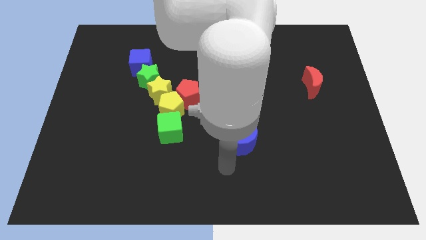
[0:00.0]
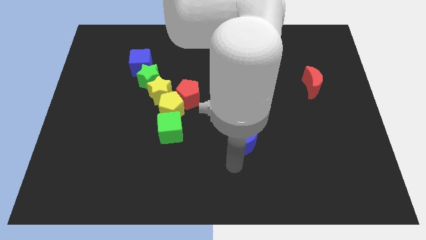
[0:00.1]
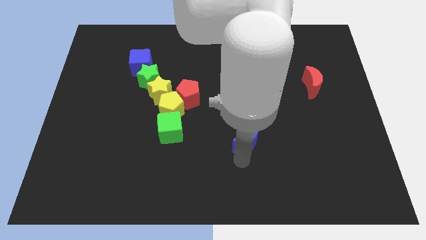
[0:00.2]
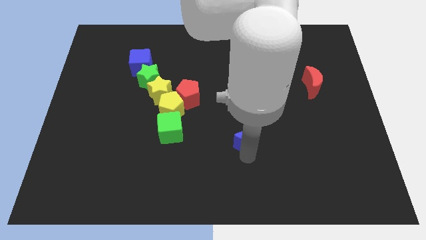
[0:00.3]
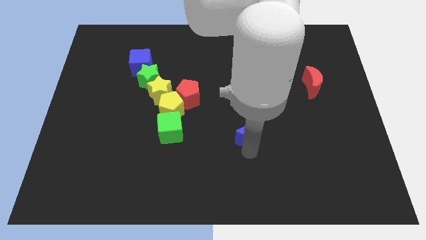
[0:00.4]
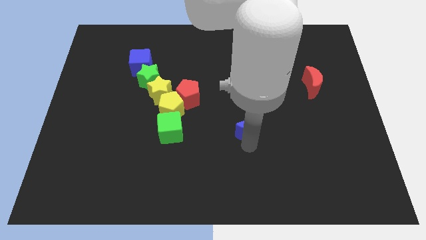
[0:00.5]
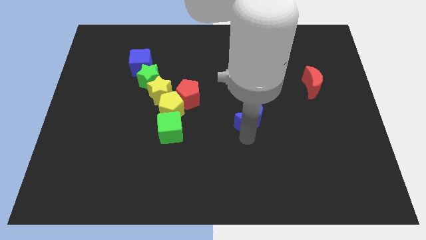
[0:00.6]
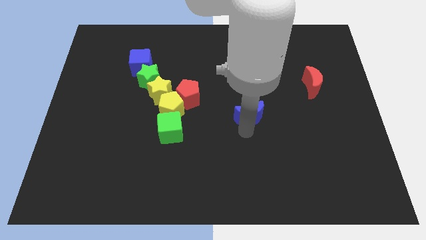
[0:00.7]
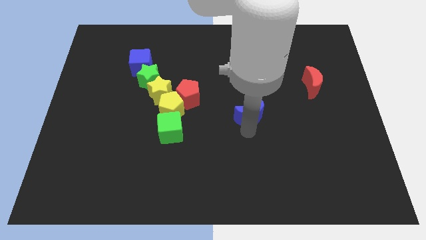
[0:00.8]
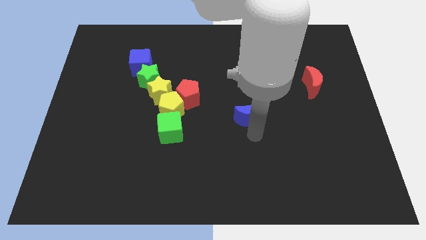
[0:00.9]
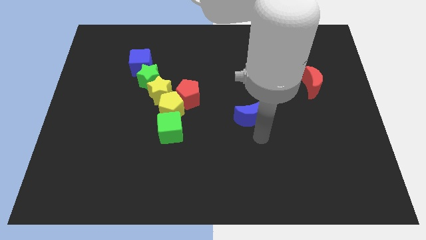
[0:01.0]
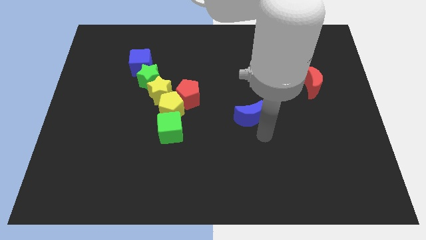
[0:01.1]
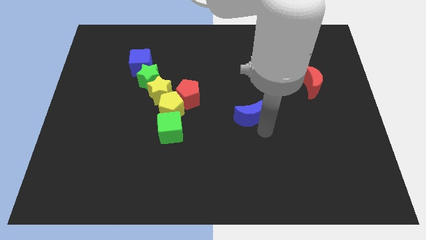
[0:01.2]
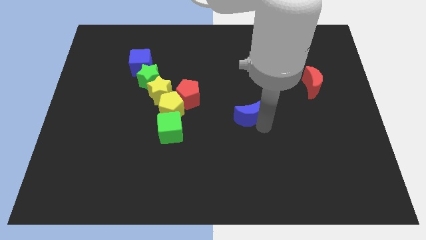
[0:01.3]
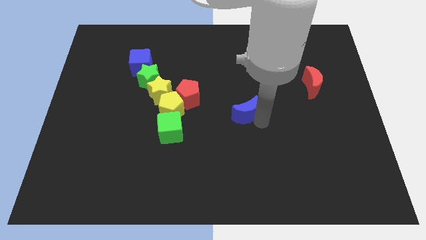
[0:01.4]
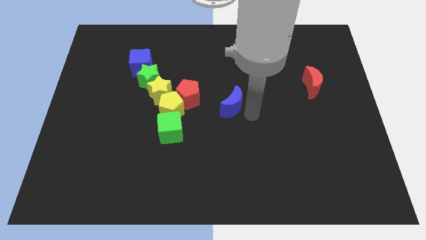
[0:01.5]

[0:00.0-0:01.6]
move the blue moon to the right of red pentagon

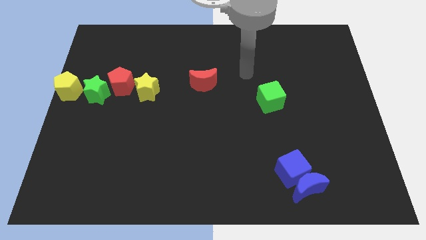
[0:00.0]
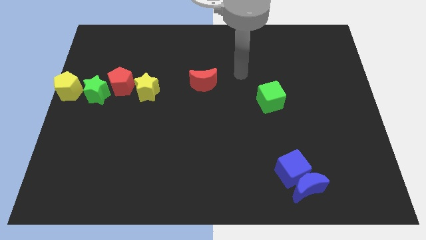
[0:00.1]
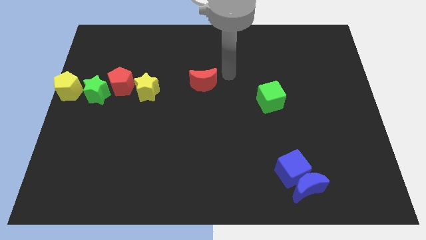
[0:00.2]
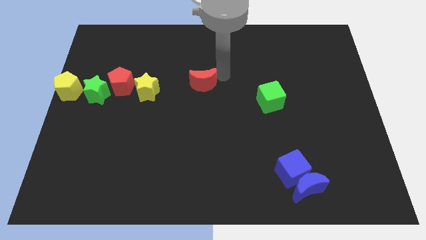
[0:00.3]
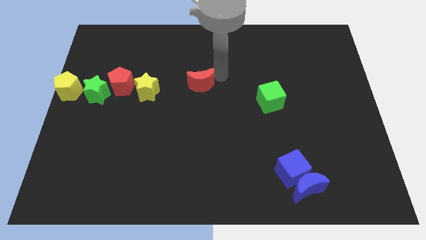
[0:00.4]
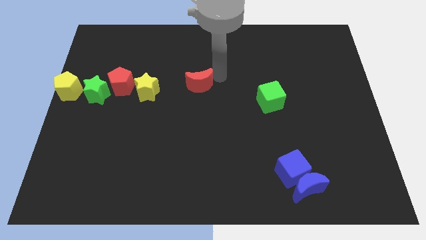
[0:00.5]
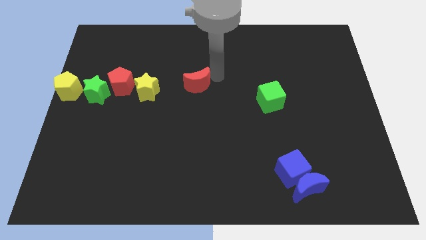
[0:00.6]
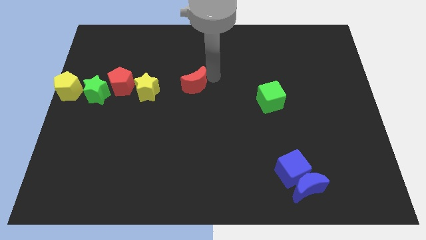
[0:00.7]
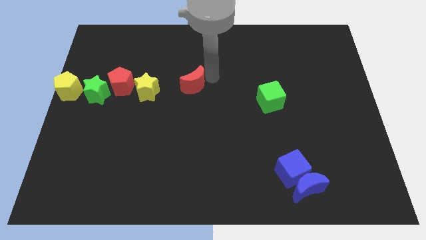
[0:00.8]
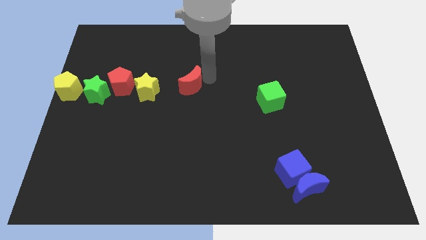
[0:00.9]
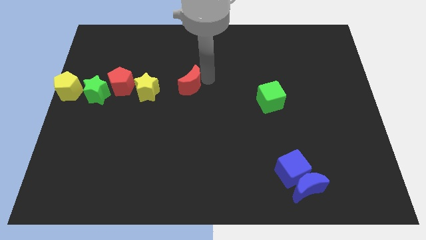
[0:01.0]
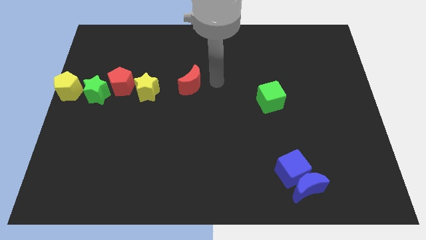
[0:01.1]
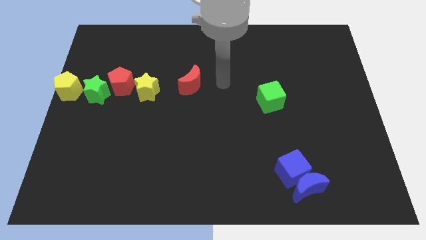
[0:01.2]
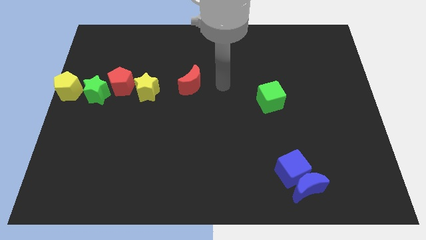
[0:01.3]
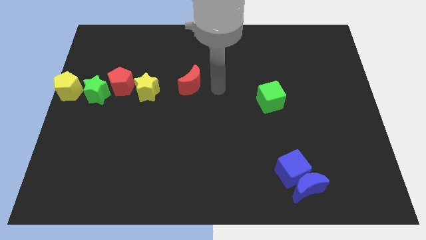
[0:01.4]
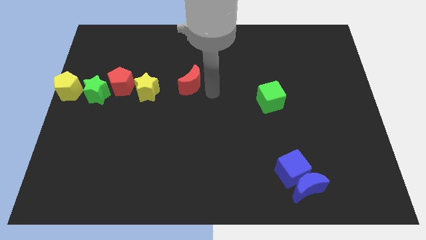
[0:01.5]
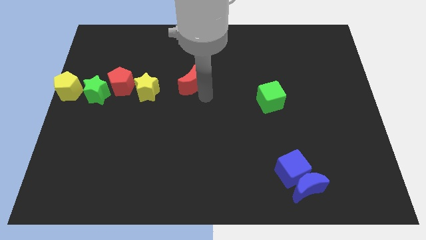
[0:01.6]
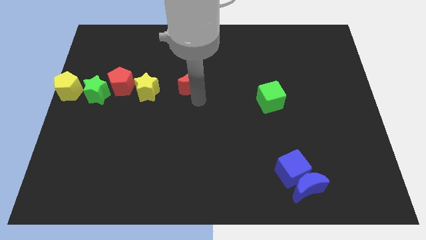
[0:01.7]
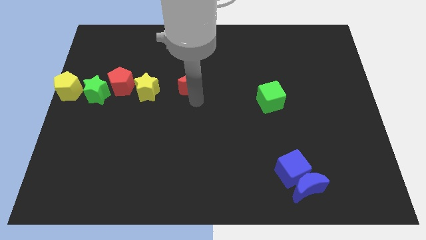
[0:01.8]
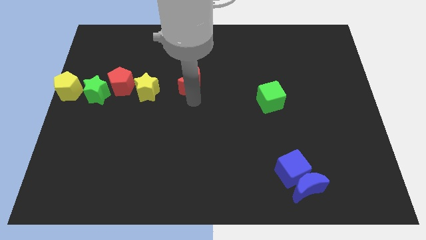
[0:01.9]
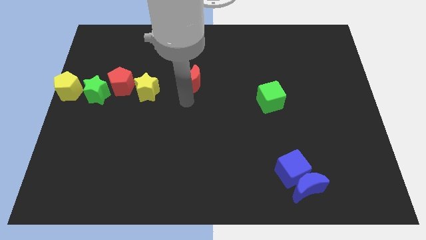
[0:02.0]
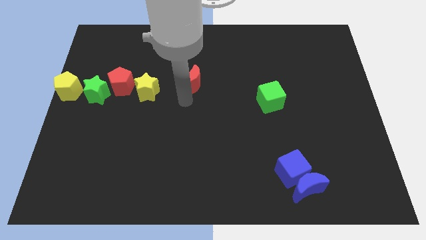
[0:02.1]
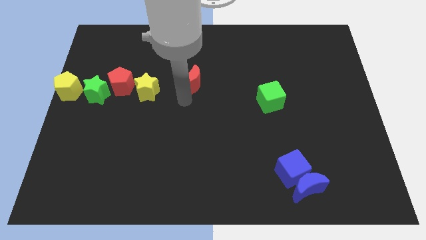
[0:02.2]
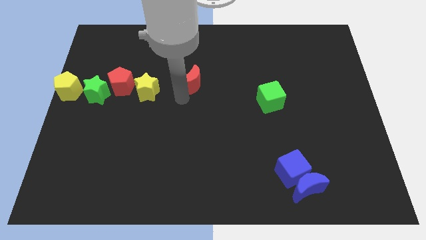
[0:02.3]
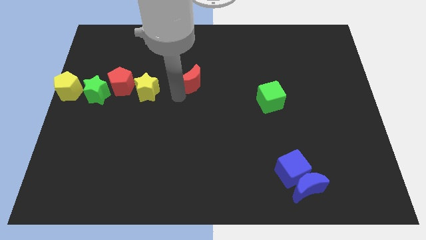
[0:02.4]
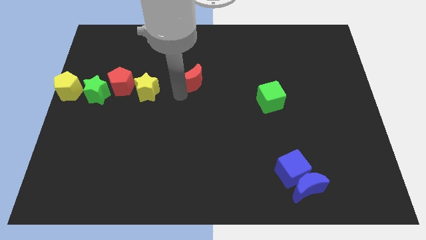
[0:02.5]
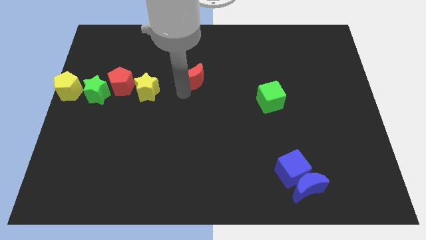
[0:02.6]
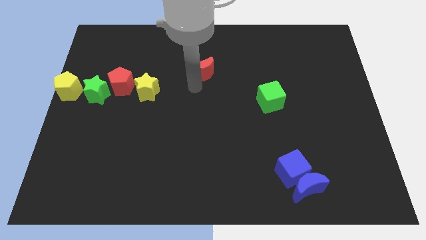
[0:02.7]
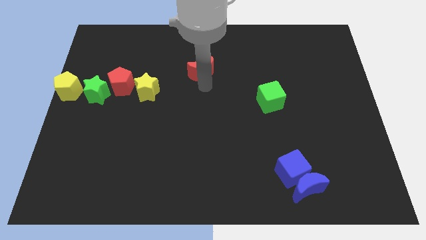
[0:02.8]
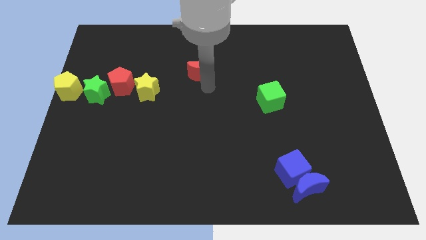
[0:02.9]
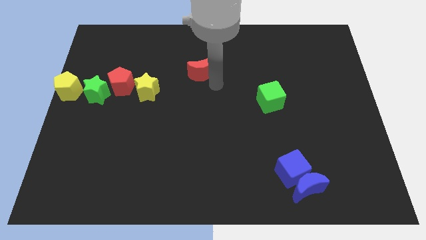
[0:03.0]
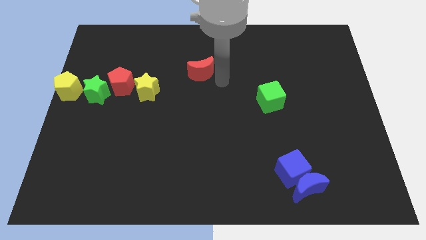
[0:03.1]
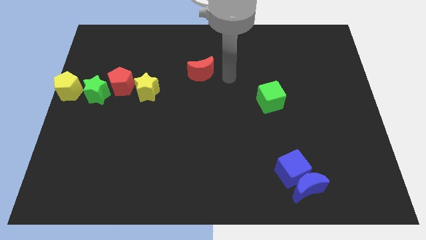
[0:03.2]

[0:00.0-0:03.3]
place the red moon diagonally to the right of yellow star

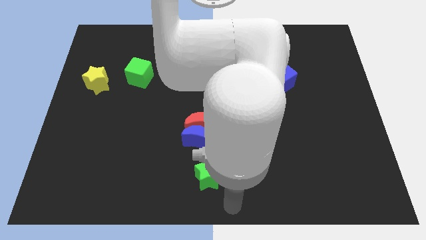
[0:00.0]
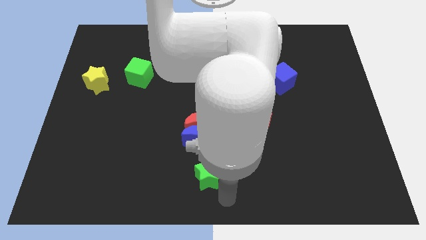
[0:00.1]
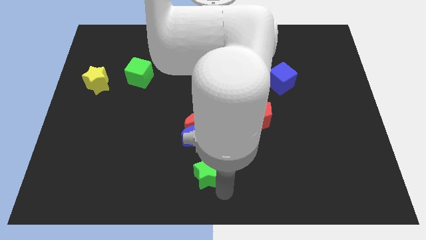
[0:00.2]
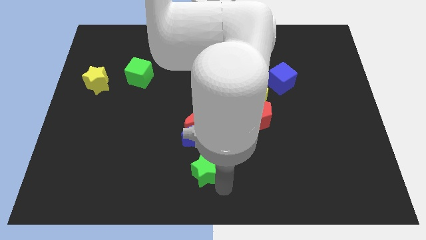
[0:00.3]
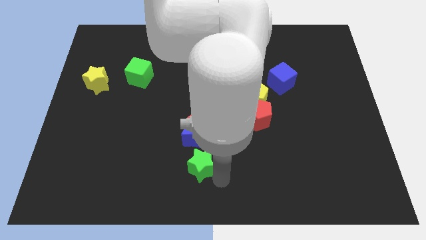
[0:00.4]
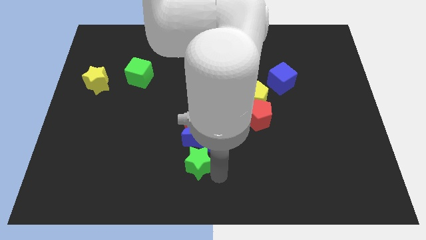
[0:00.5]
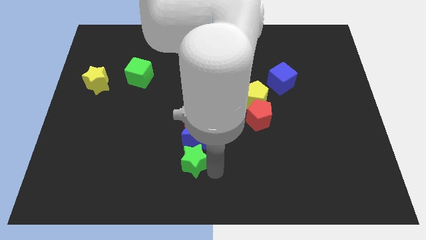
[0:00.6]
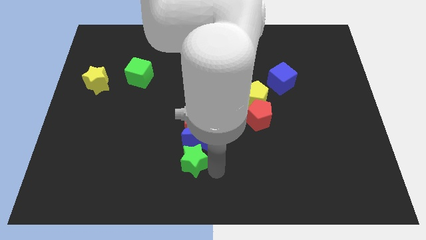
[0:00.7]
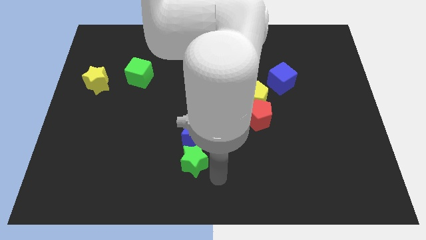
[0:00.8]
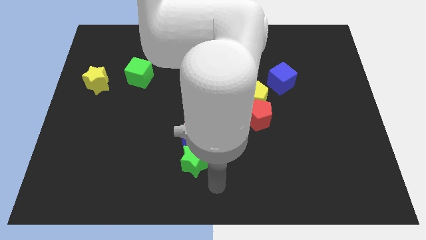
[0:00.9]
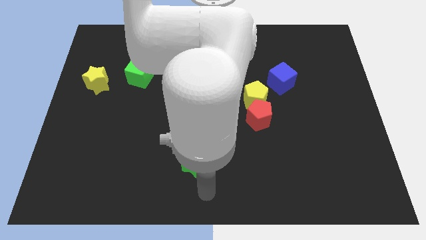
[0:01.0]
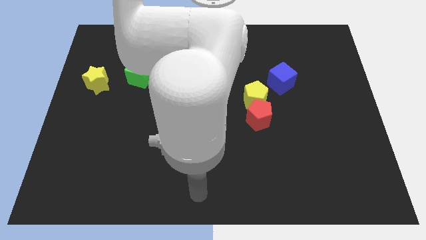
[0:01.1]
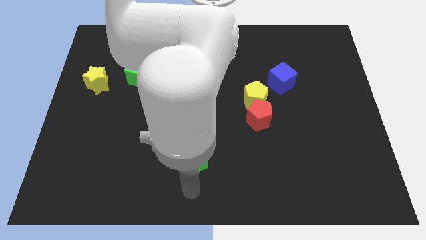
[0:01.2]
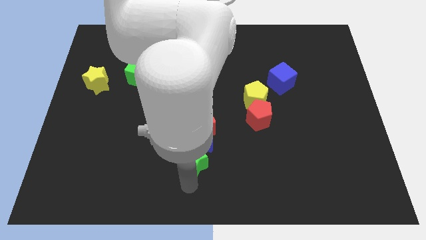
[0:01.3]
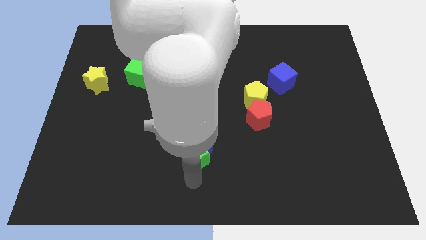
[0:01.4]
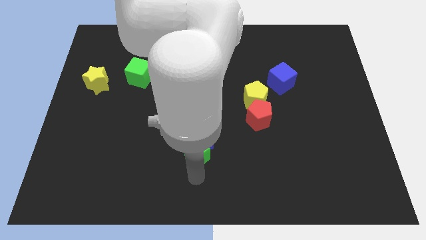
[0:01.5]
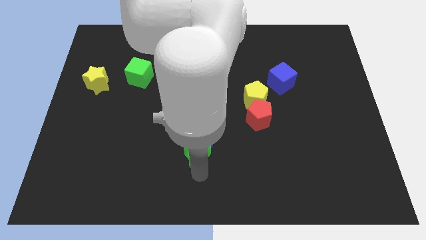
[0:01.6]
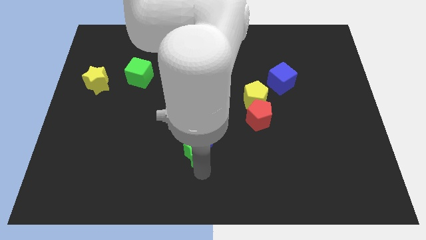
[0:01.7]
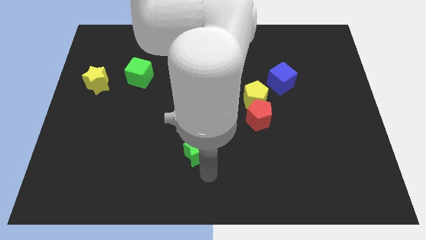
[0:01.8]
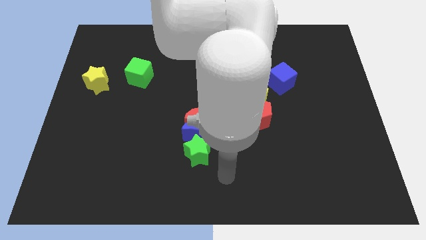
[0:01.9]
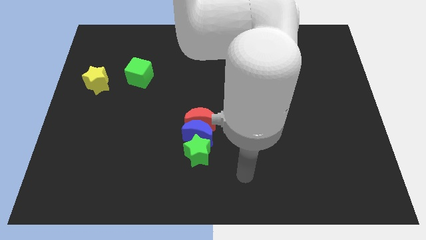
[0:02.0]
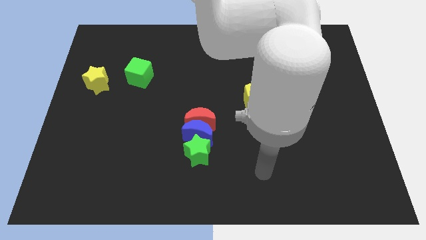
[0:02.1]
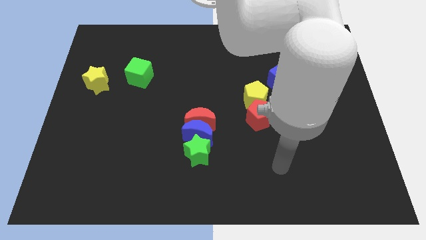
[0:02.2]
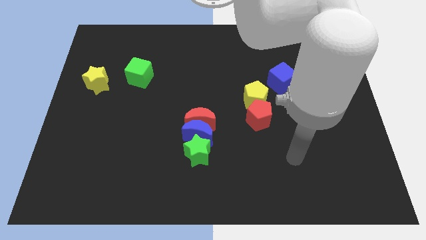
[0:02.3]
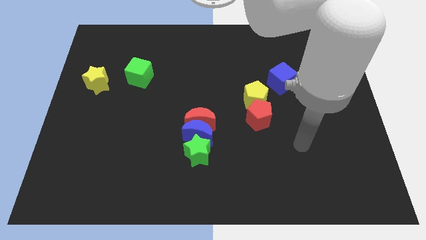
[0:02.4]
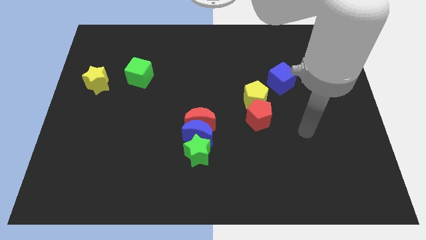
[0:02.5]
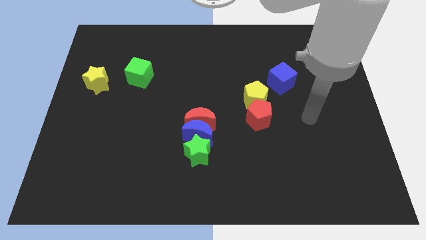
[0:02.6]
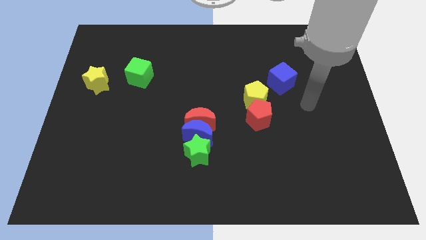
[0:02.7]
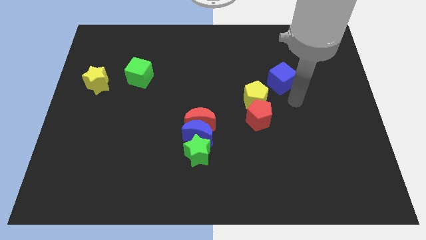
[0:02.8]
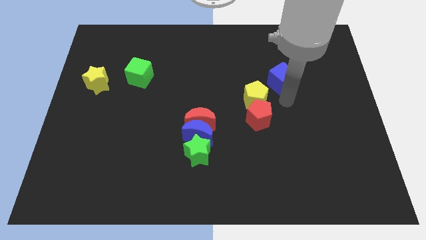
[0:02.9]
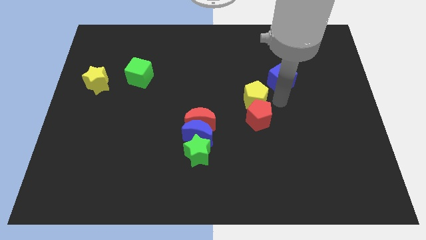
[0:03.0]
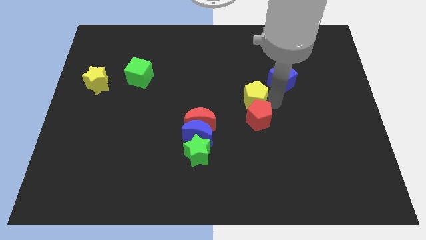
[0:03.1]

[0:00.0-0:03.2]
push the green star into the blue crescent

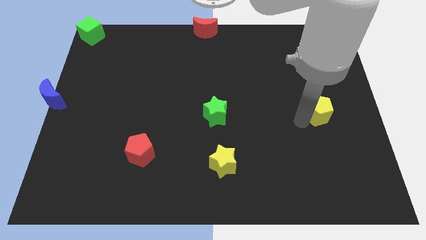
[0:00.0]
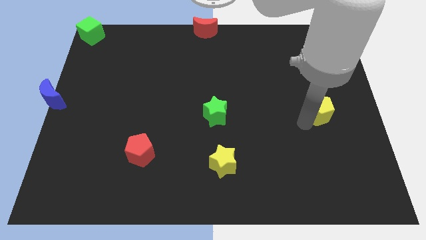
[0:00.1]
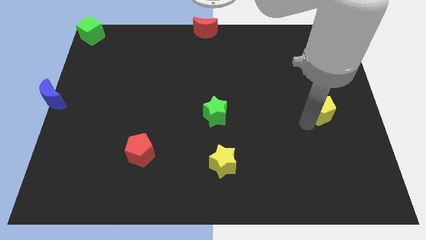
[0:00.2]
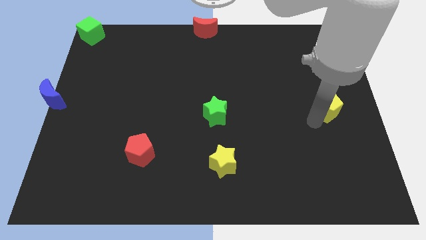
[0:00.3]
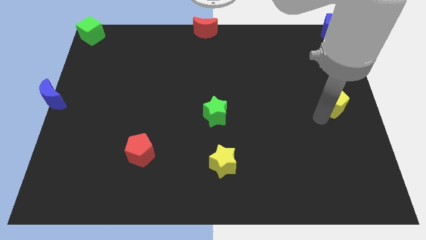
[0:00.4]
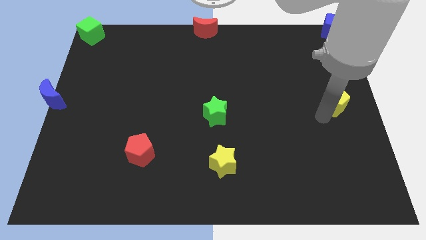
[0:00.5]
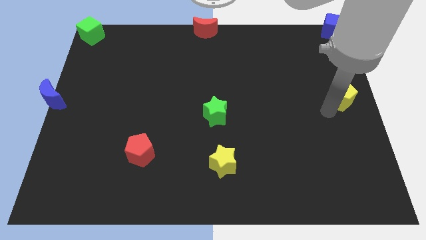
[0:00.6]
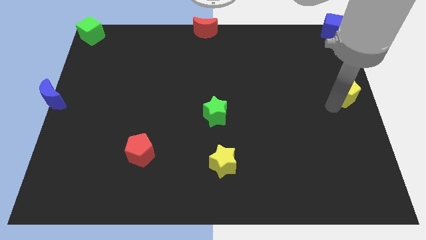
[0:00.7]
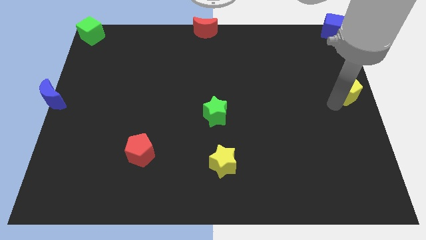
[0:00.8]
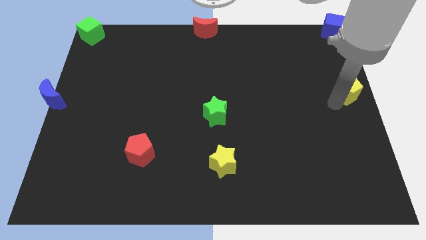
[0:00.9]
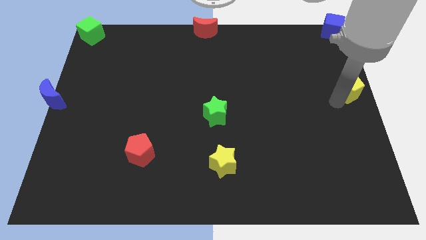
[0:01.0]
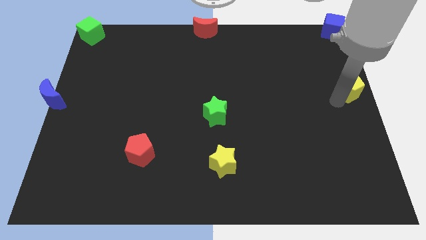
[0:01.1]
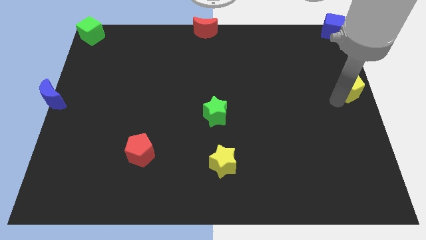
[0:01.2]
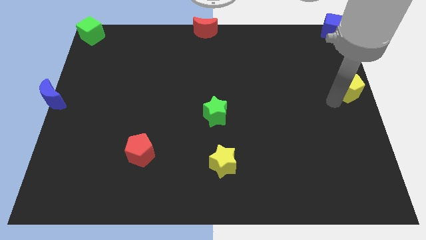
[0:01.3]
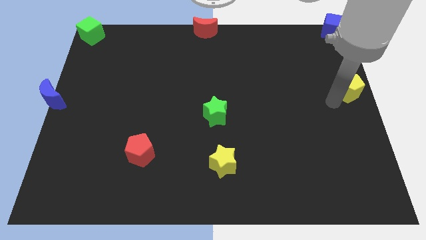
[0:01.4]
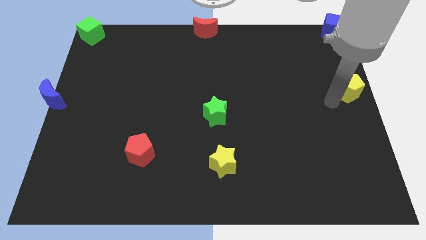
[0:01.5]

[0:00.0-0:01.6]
push the yellow pentagon to the center right
